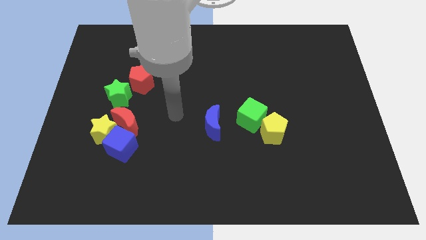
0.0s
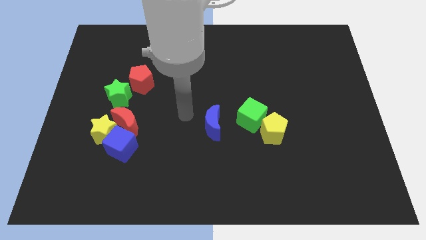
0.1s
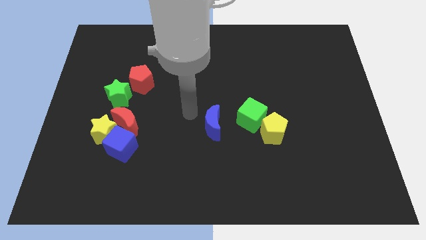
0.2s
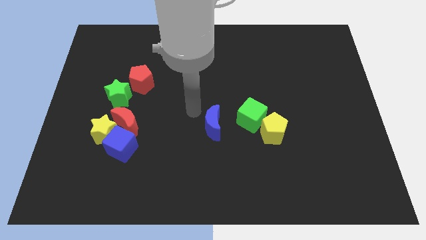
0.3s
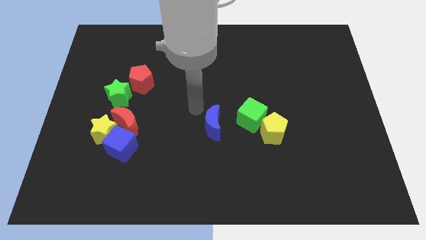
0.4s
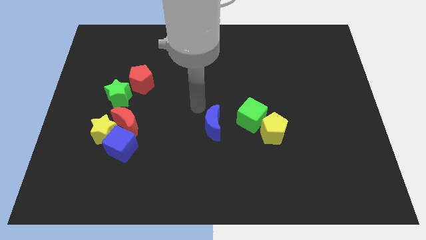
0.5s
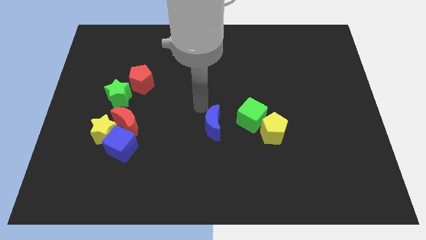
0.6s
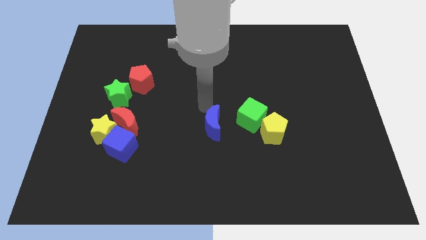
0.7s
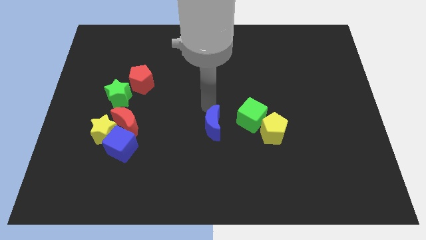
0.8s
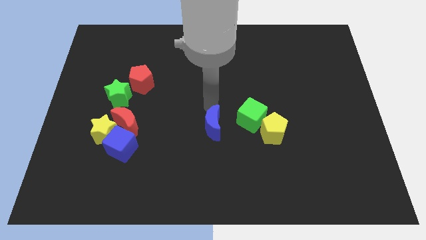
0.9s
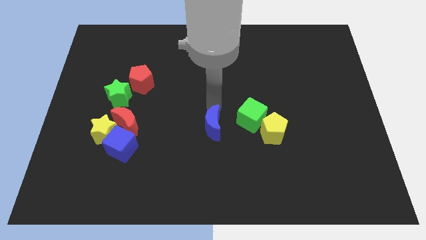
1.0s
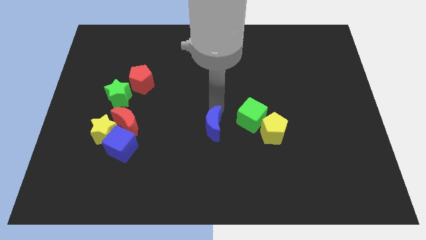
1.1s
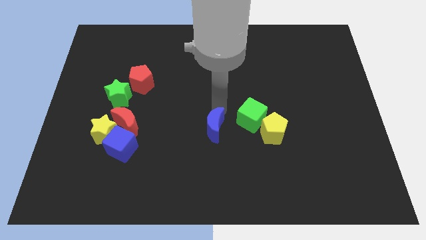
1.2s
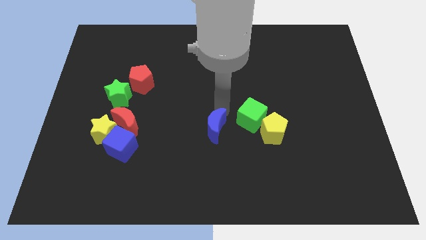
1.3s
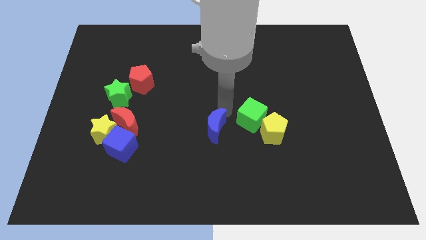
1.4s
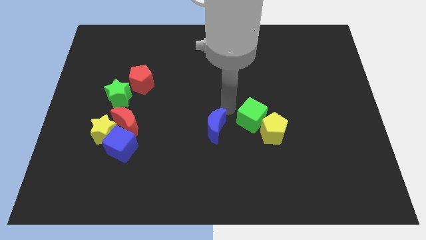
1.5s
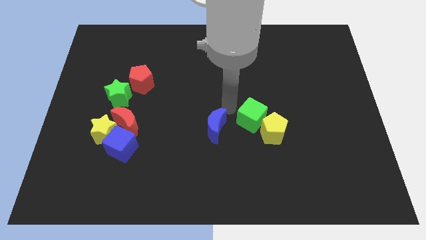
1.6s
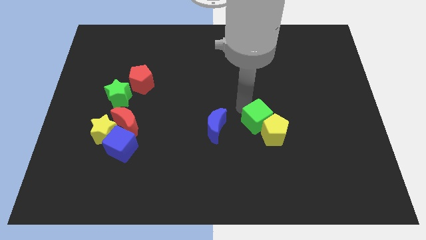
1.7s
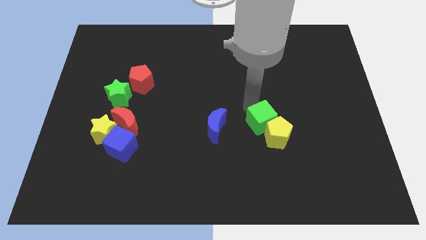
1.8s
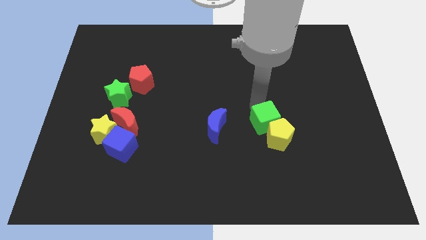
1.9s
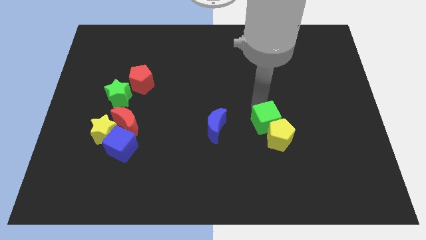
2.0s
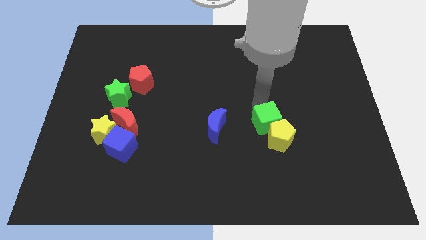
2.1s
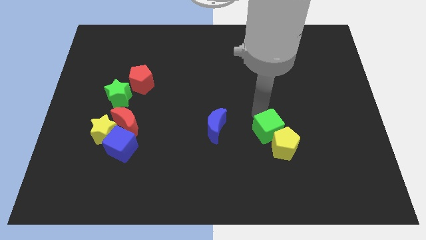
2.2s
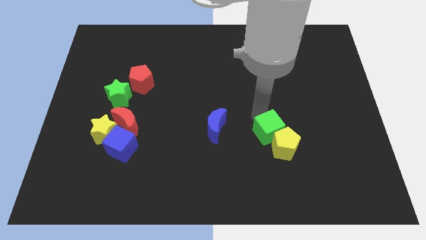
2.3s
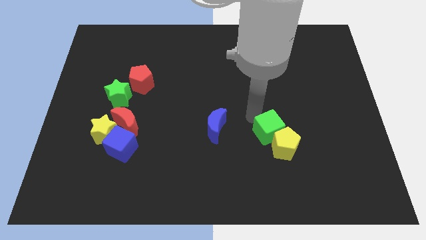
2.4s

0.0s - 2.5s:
move blue half moon slightly to green cube

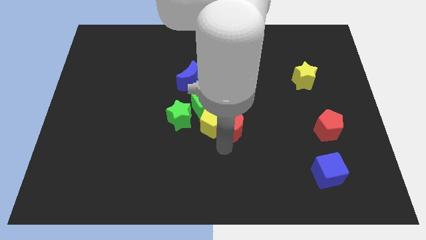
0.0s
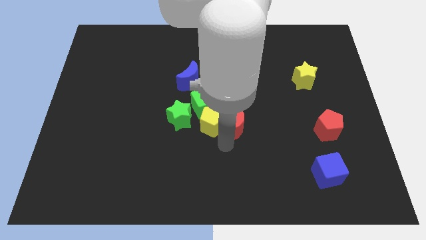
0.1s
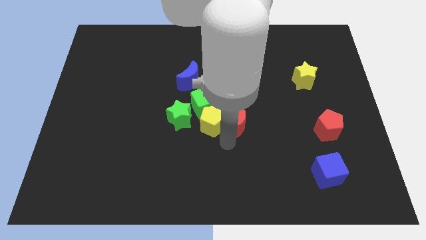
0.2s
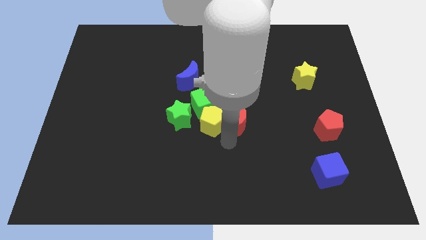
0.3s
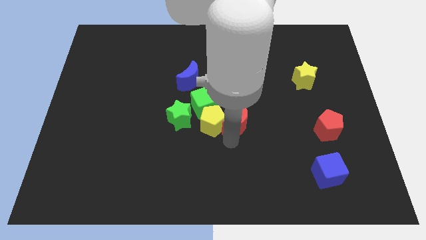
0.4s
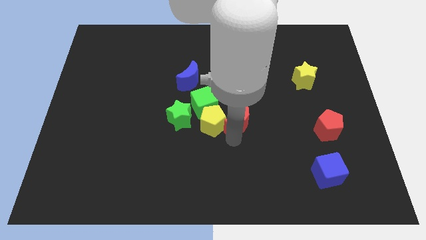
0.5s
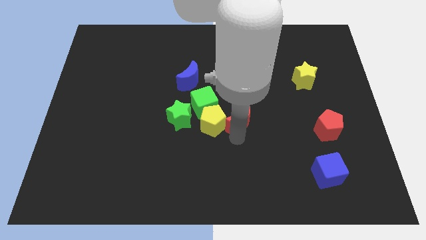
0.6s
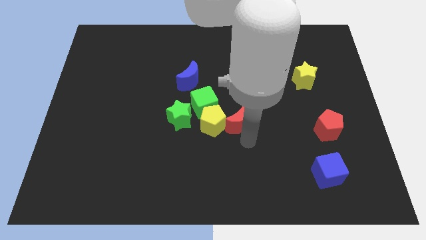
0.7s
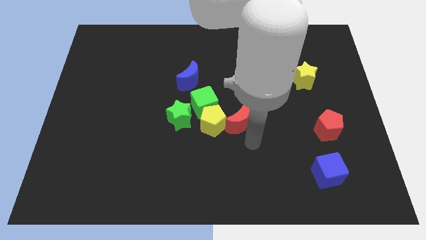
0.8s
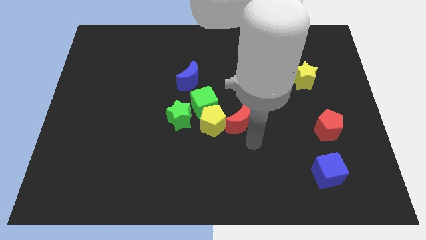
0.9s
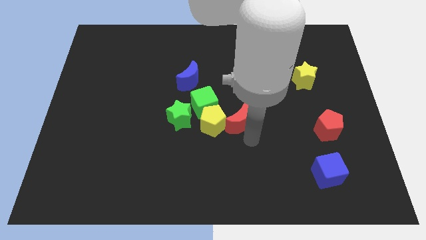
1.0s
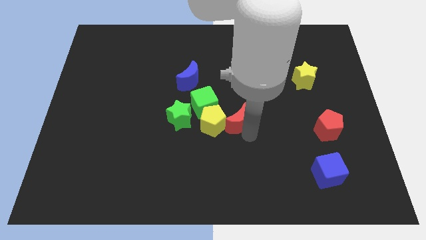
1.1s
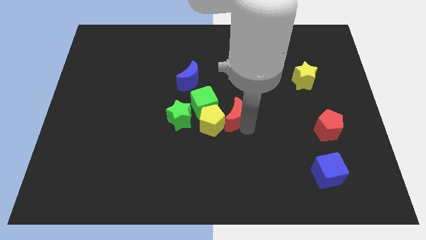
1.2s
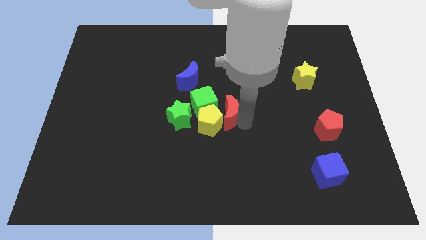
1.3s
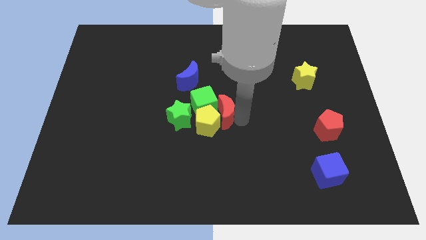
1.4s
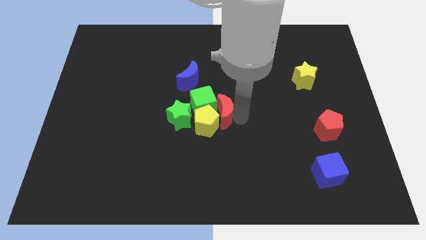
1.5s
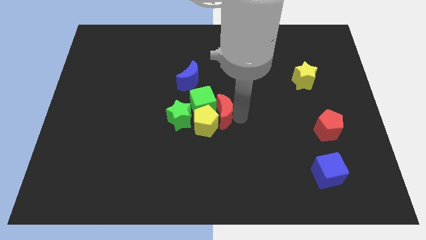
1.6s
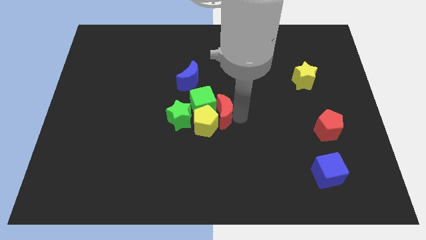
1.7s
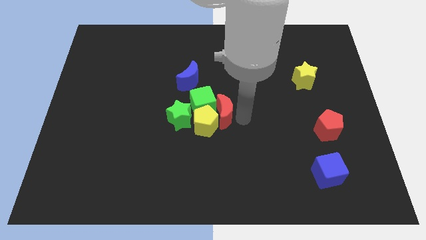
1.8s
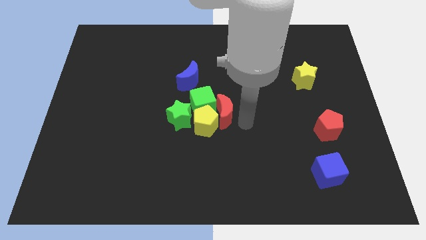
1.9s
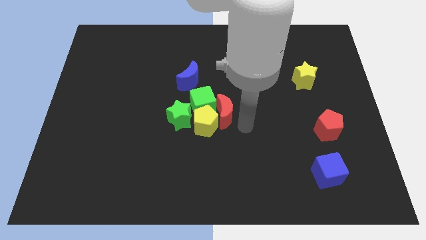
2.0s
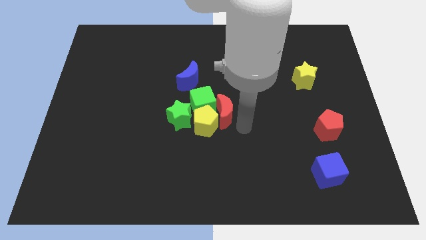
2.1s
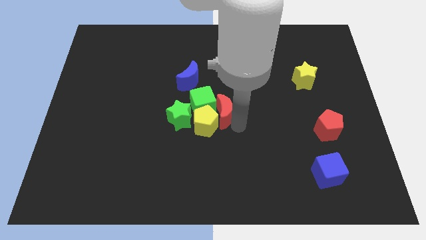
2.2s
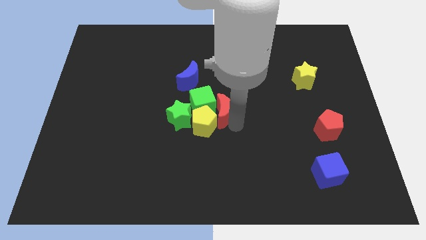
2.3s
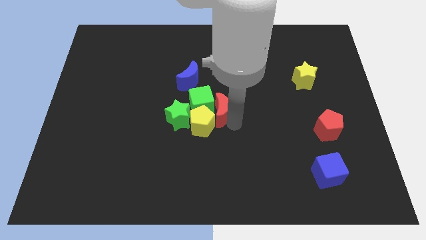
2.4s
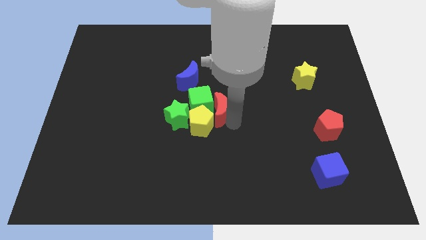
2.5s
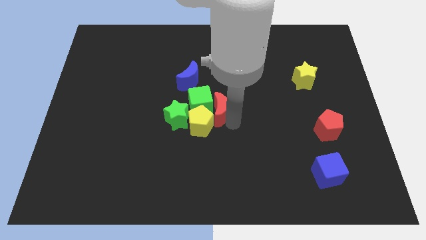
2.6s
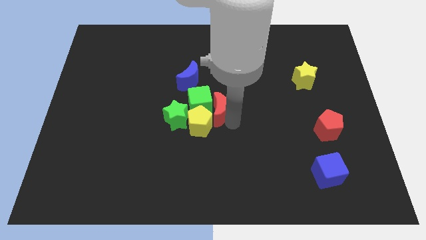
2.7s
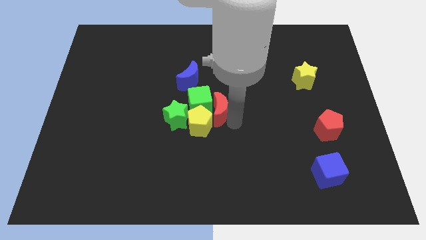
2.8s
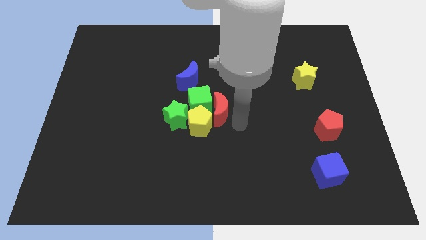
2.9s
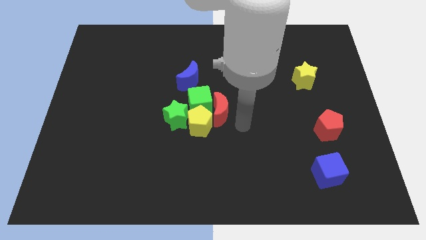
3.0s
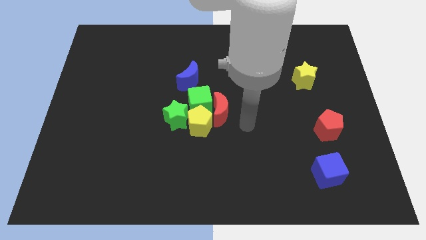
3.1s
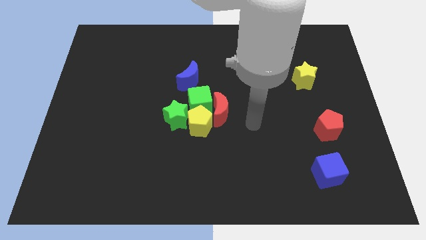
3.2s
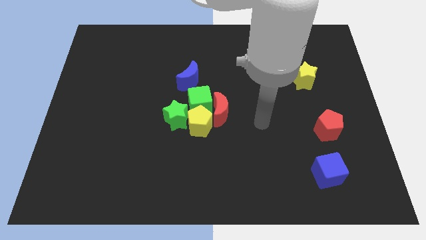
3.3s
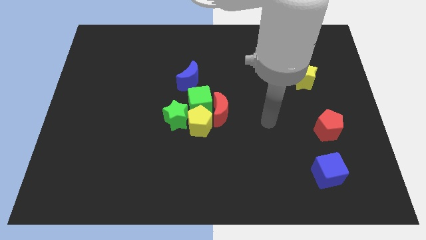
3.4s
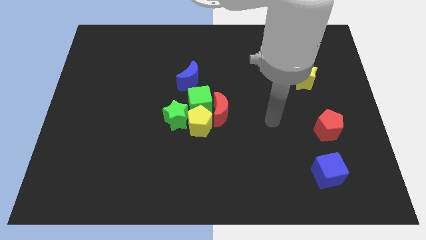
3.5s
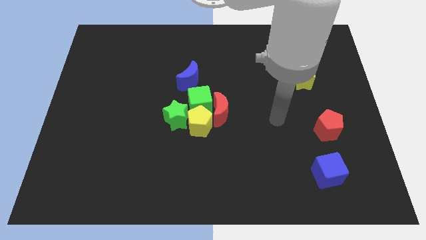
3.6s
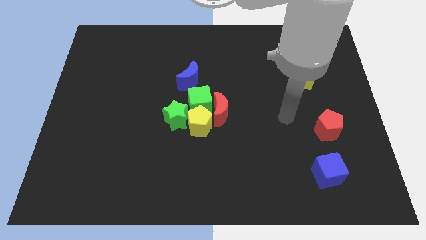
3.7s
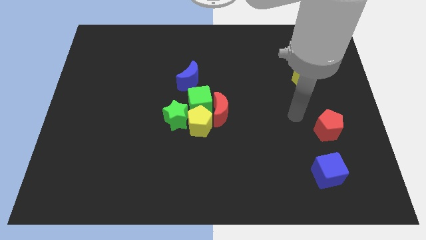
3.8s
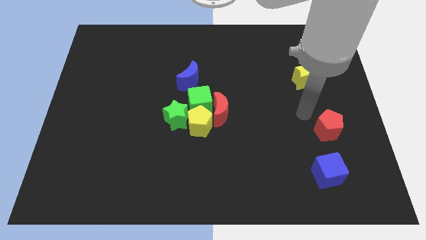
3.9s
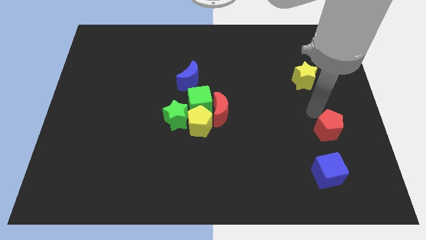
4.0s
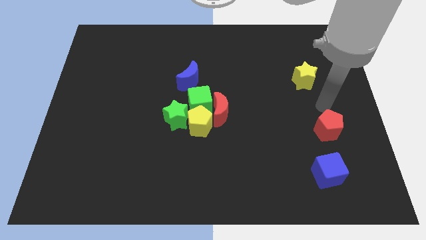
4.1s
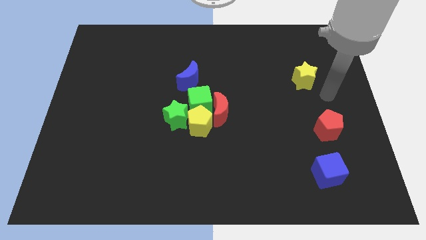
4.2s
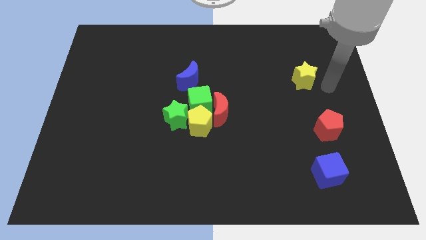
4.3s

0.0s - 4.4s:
slide the red crescent into the green cube

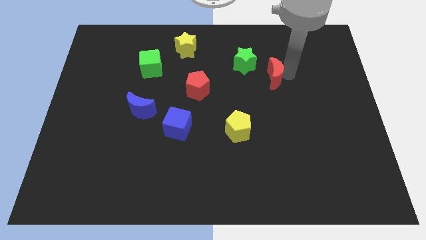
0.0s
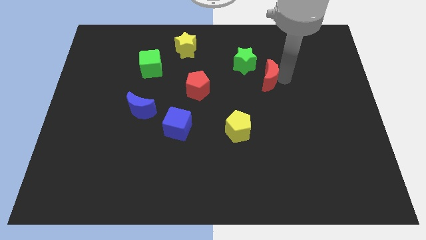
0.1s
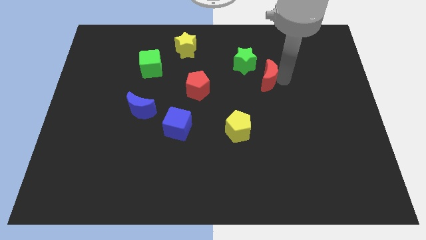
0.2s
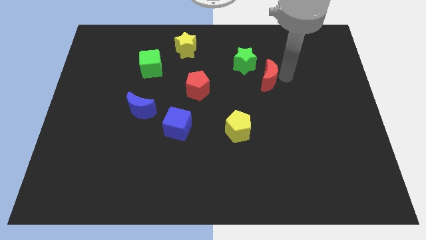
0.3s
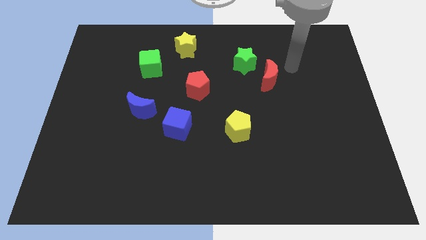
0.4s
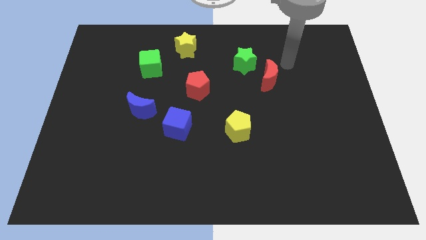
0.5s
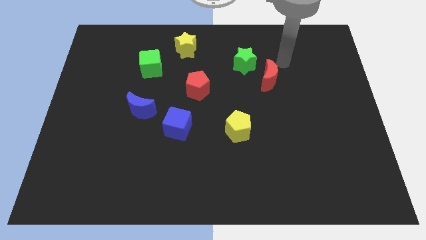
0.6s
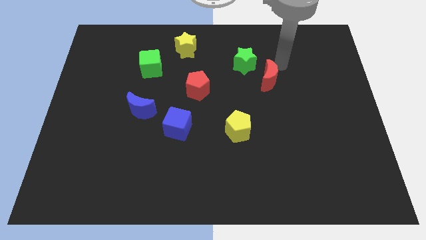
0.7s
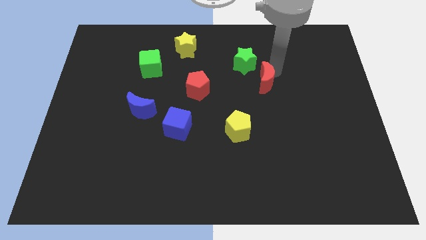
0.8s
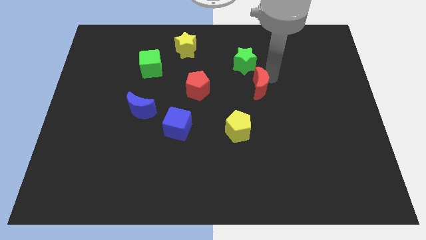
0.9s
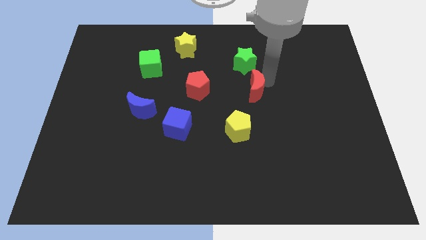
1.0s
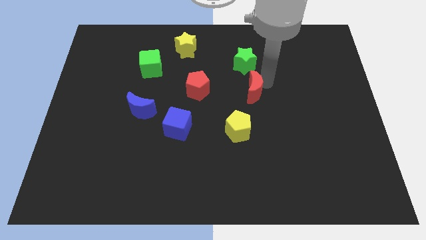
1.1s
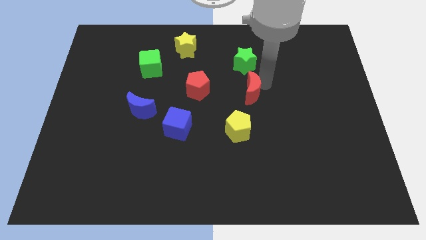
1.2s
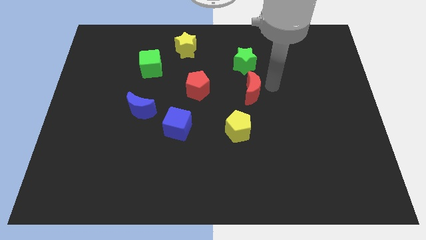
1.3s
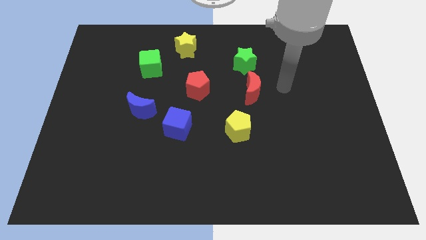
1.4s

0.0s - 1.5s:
place red moon below green star

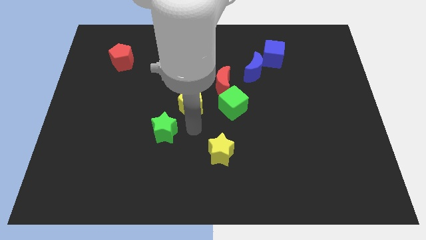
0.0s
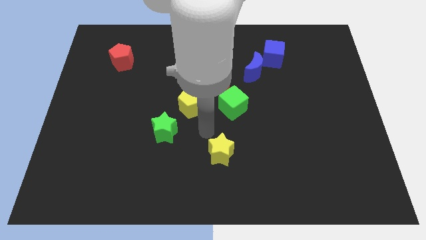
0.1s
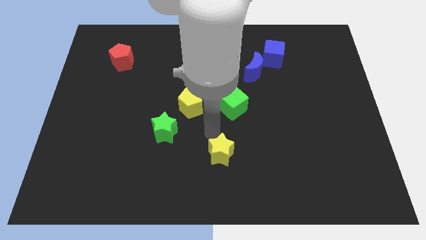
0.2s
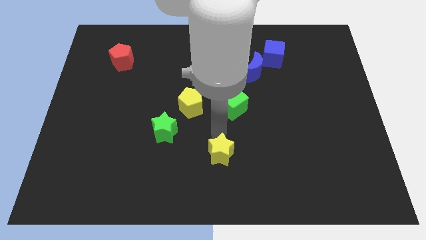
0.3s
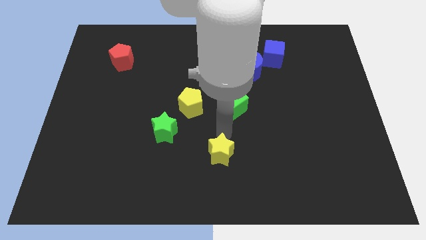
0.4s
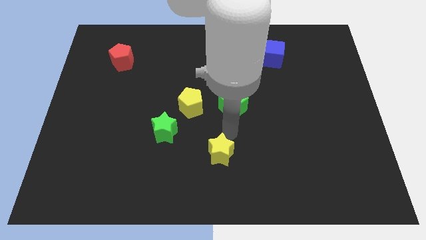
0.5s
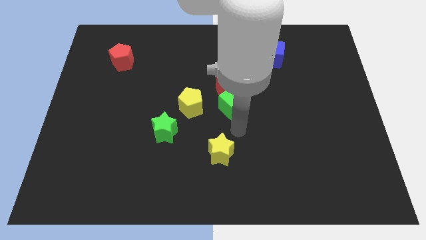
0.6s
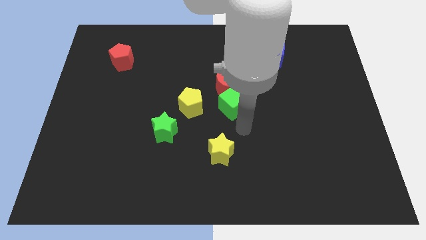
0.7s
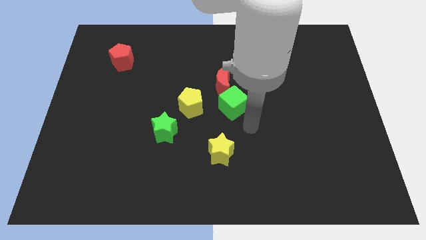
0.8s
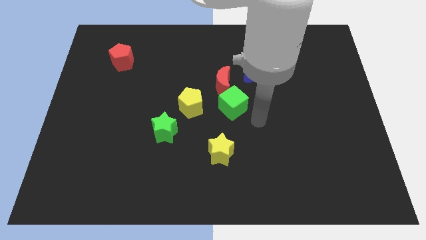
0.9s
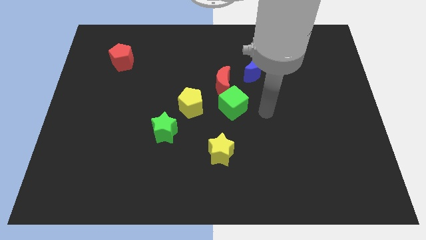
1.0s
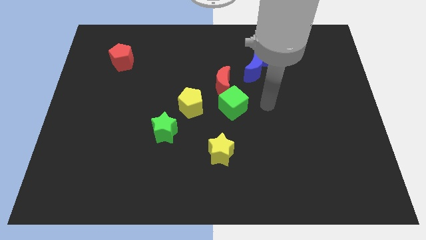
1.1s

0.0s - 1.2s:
point your hand at the right side of the green cube
